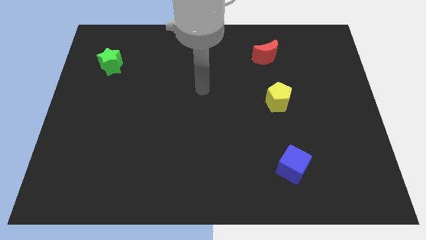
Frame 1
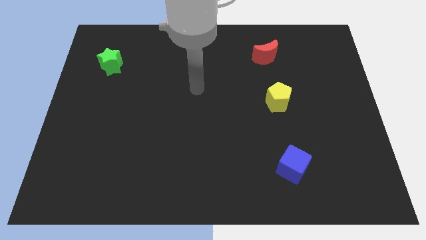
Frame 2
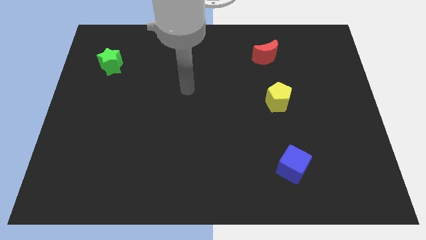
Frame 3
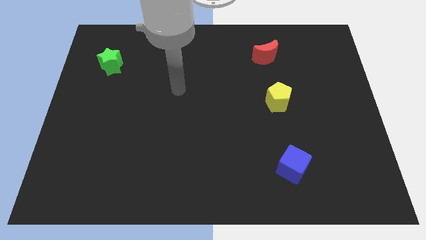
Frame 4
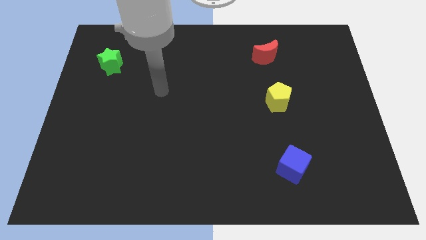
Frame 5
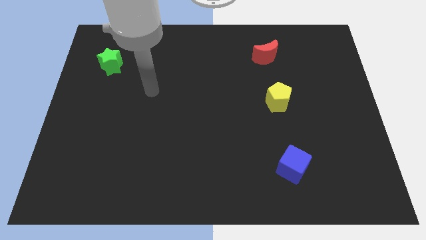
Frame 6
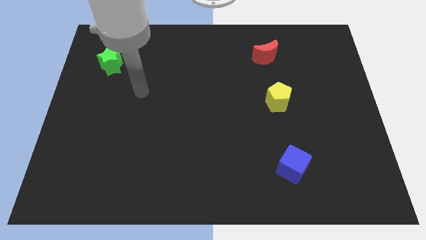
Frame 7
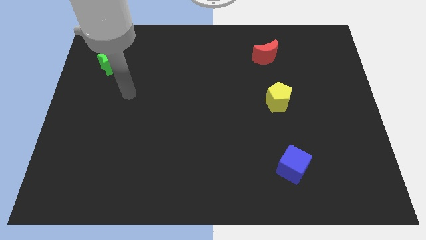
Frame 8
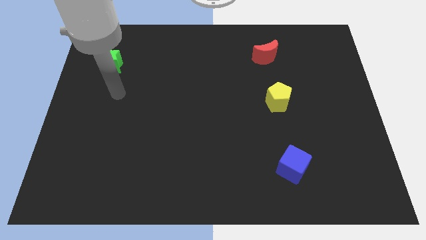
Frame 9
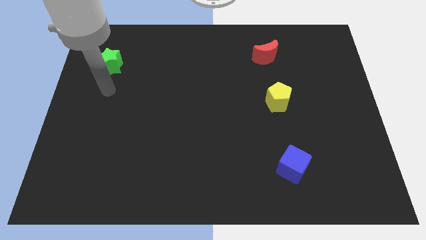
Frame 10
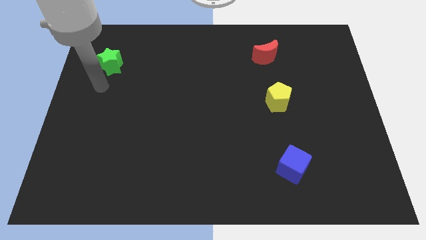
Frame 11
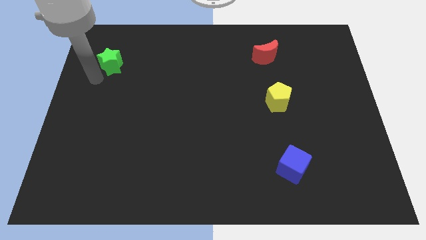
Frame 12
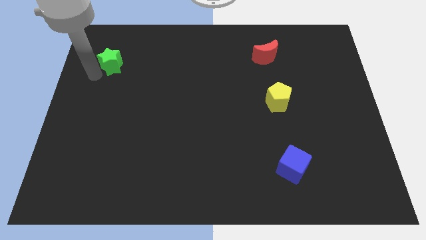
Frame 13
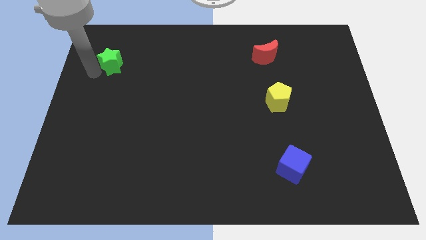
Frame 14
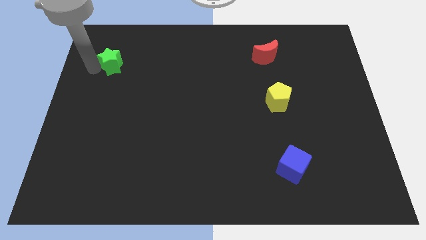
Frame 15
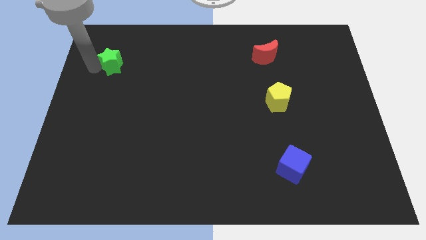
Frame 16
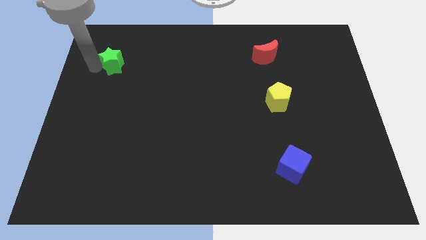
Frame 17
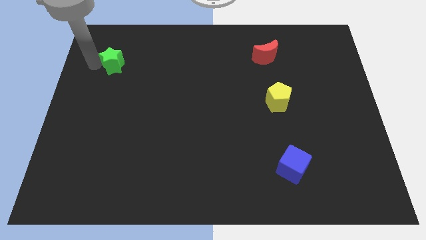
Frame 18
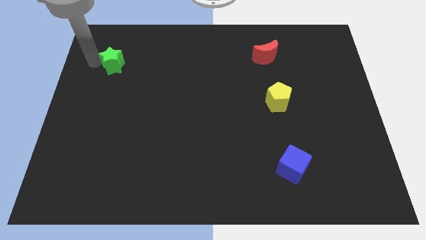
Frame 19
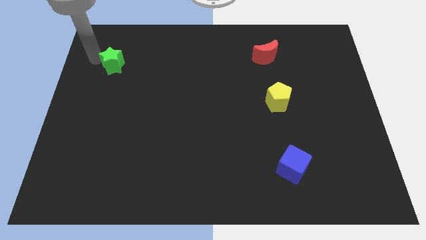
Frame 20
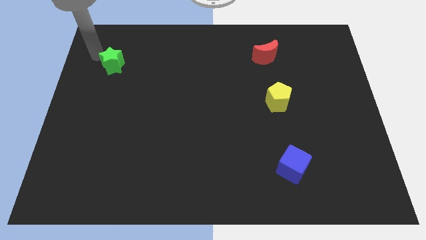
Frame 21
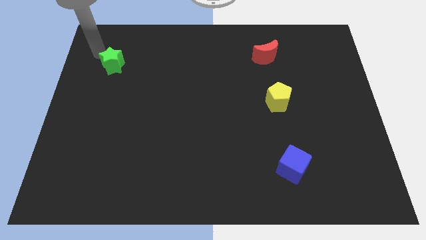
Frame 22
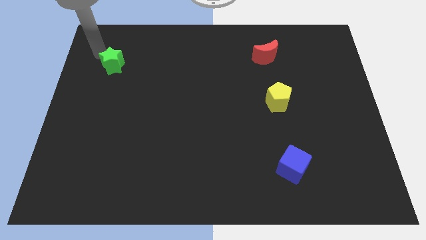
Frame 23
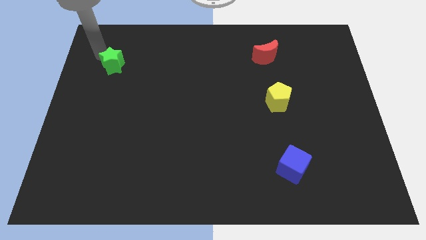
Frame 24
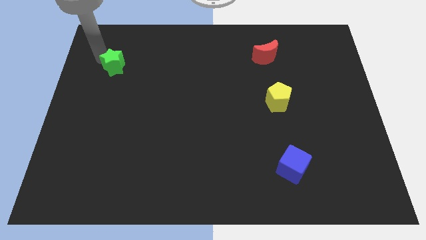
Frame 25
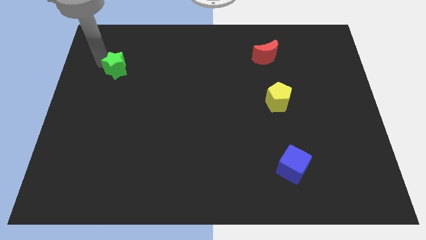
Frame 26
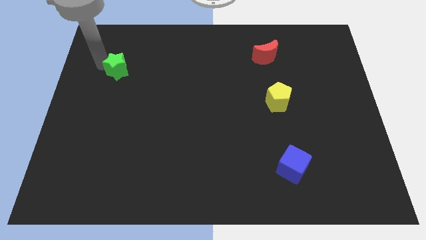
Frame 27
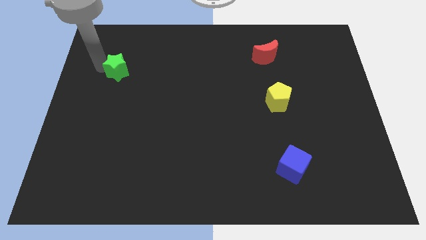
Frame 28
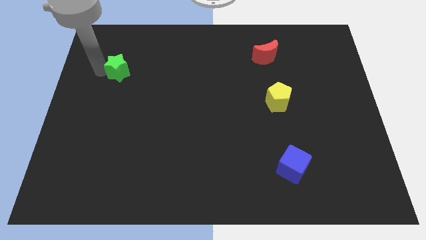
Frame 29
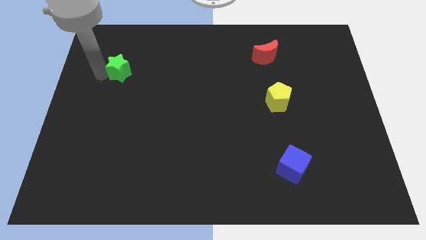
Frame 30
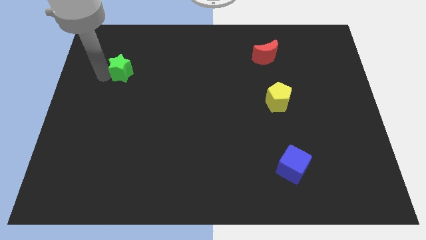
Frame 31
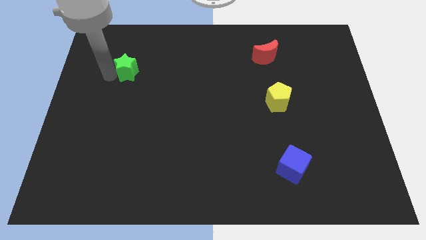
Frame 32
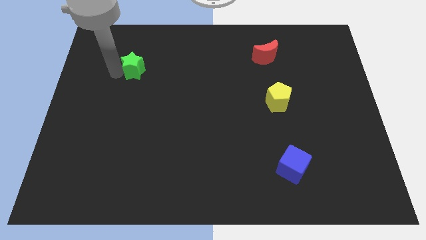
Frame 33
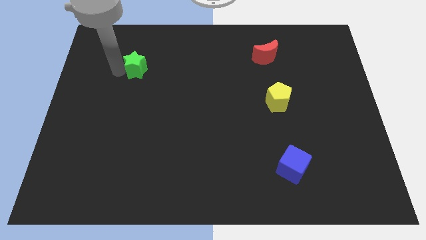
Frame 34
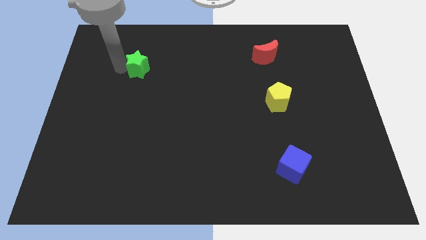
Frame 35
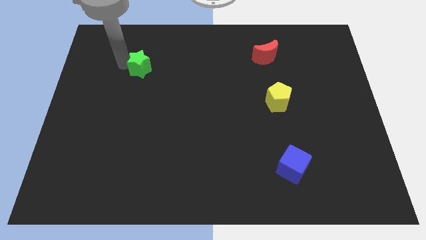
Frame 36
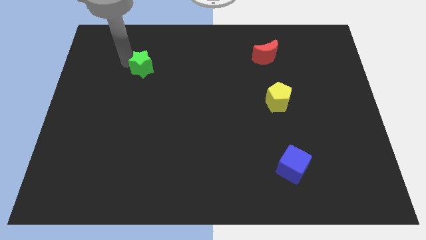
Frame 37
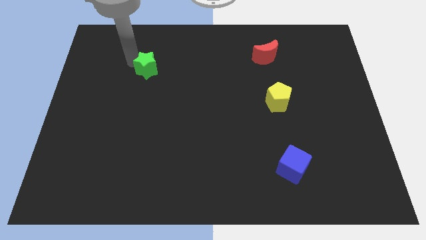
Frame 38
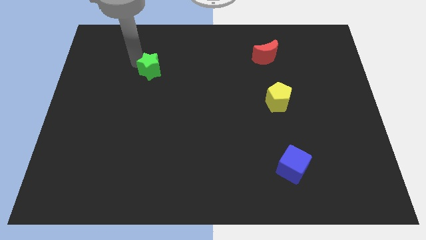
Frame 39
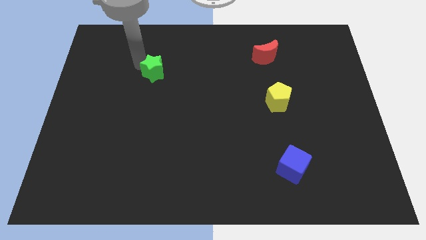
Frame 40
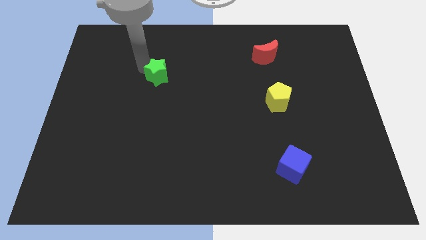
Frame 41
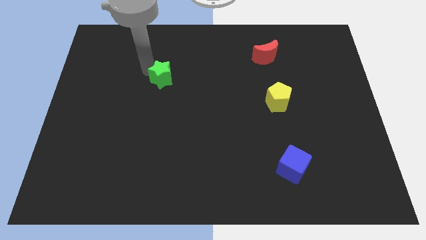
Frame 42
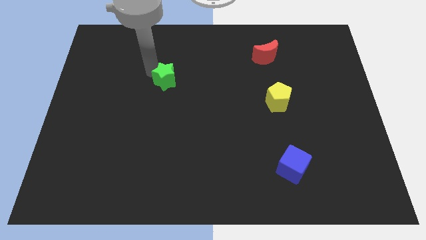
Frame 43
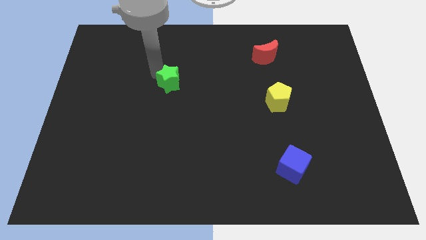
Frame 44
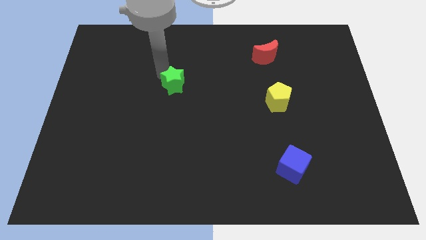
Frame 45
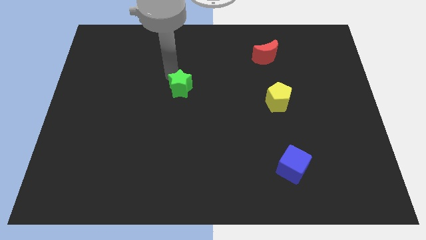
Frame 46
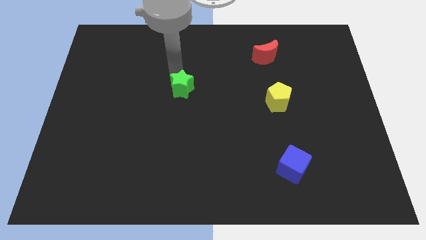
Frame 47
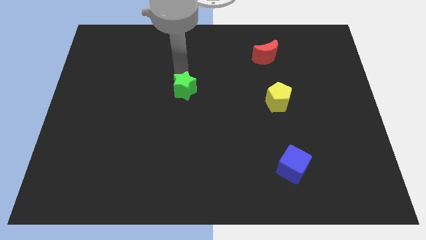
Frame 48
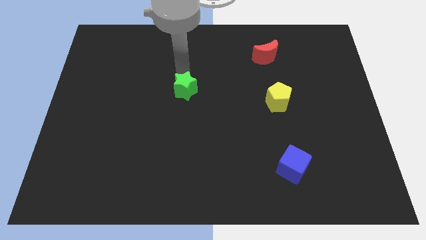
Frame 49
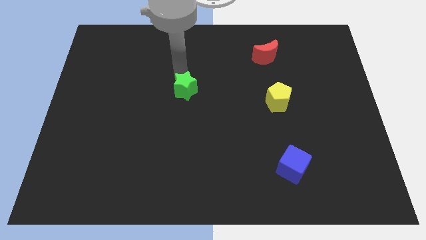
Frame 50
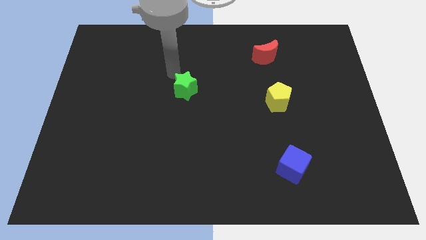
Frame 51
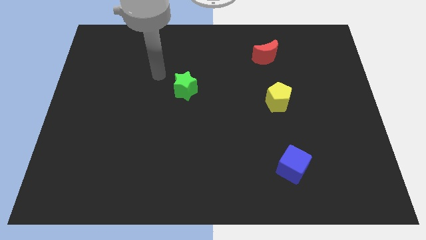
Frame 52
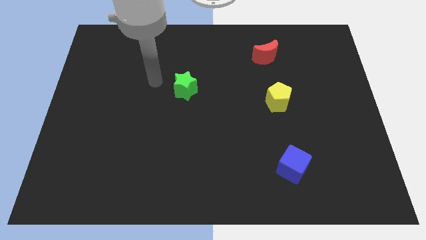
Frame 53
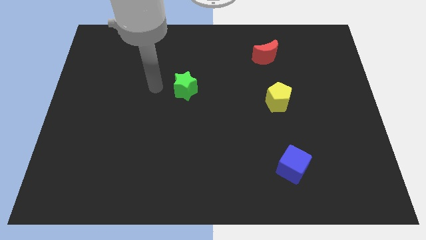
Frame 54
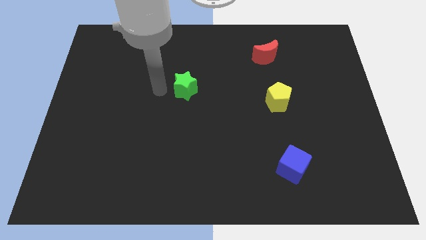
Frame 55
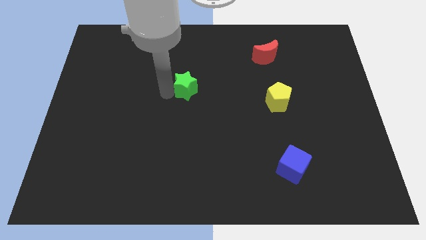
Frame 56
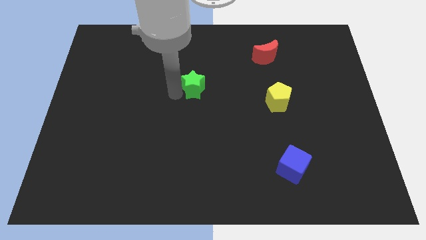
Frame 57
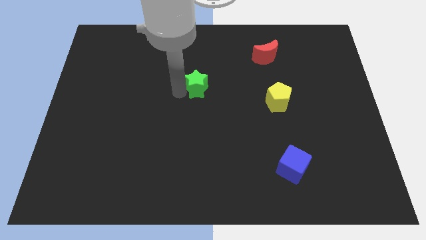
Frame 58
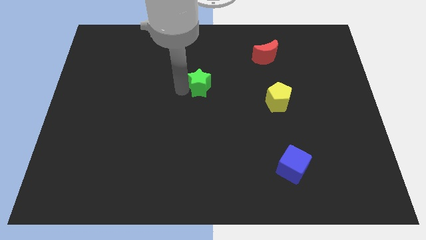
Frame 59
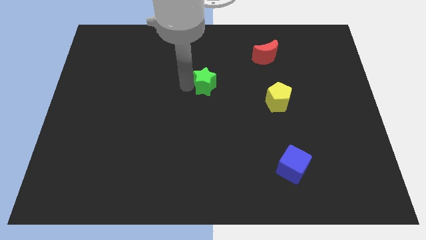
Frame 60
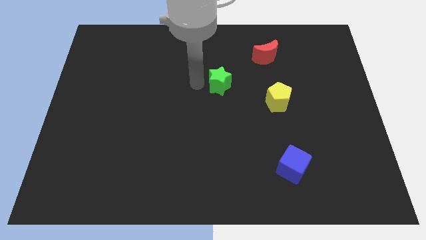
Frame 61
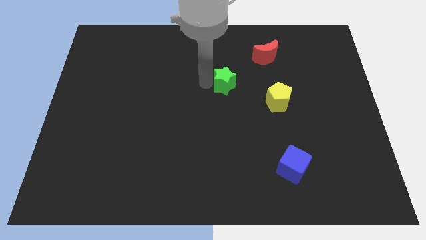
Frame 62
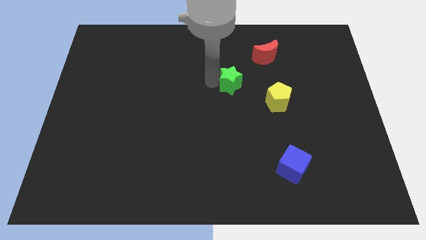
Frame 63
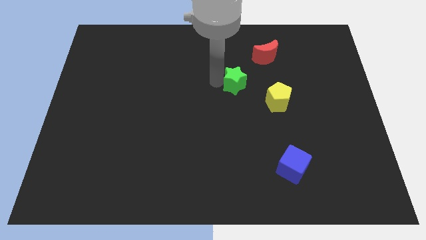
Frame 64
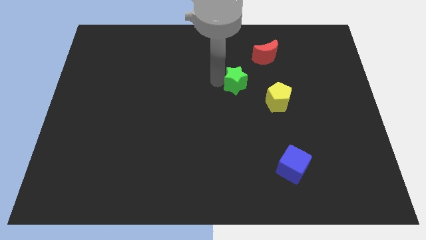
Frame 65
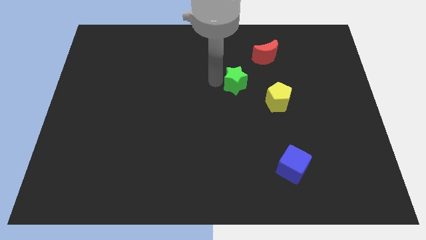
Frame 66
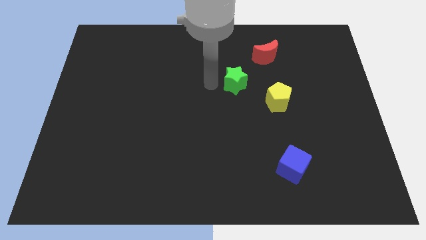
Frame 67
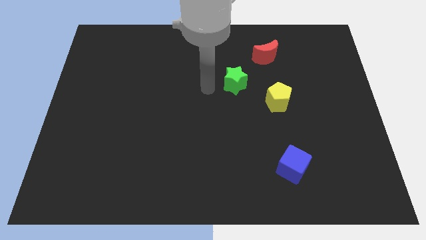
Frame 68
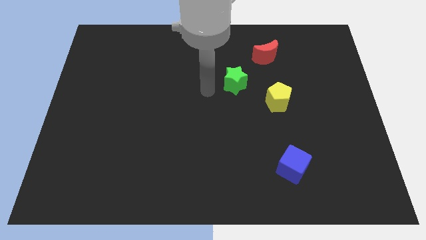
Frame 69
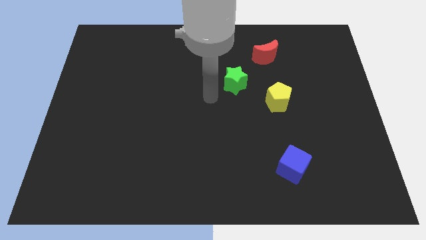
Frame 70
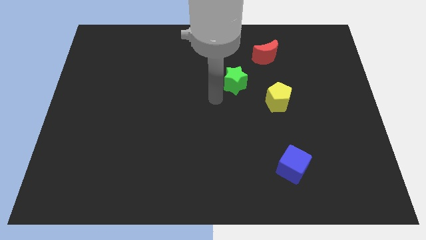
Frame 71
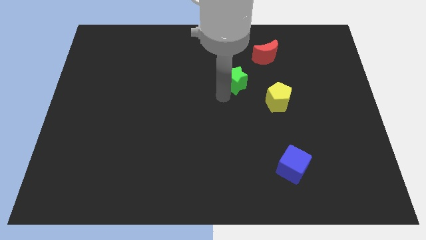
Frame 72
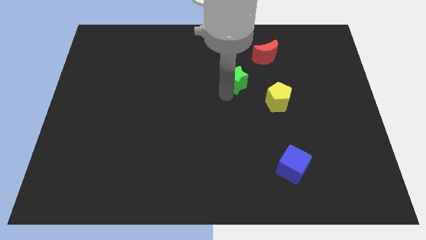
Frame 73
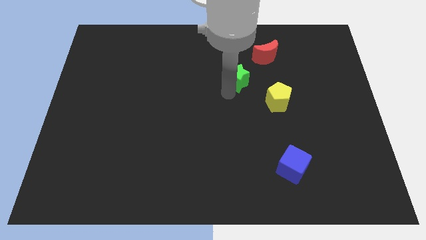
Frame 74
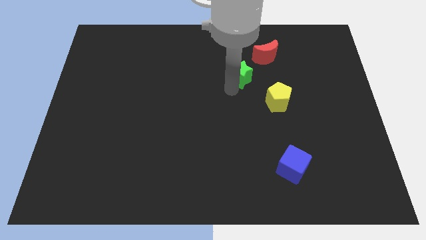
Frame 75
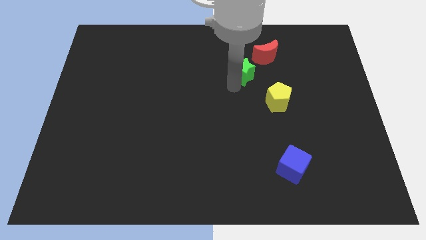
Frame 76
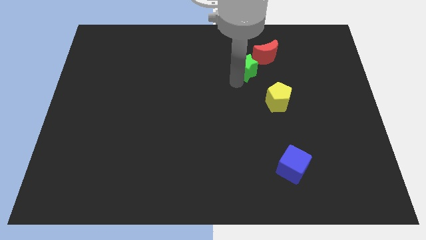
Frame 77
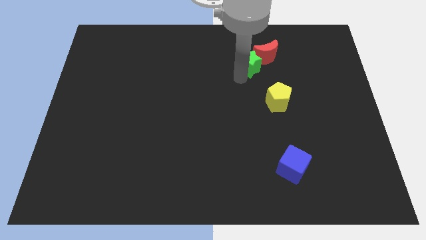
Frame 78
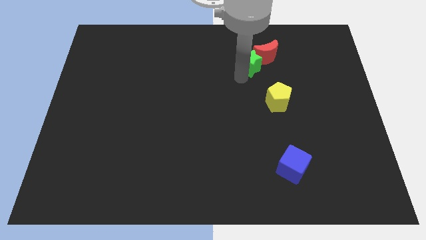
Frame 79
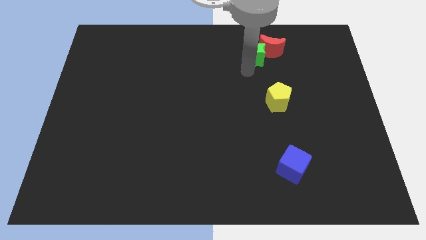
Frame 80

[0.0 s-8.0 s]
put the green block close to the red moon

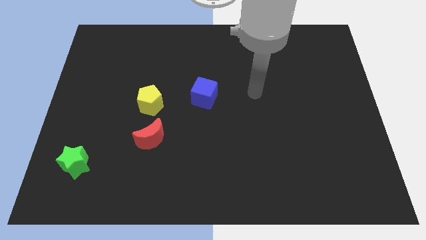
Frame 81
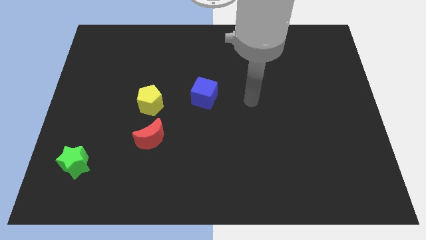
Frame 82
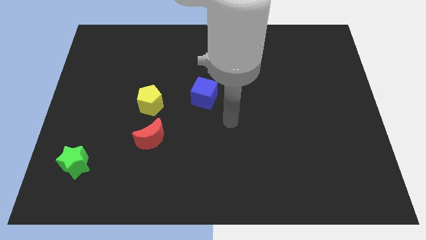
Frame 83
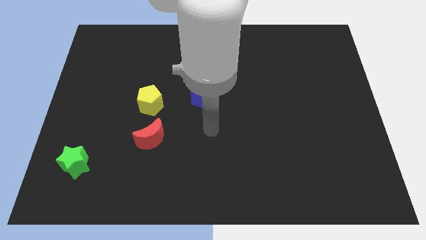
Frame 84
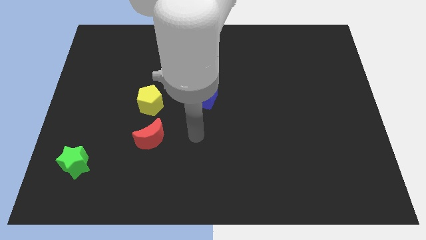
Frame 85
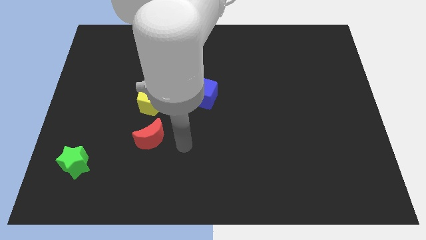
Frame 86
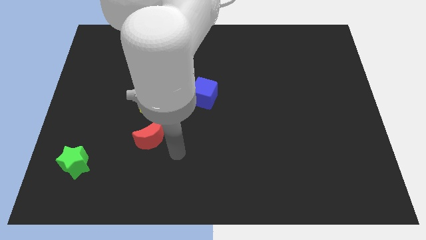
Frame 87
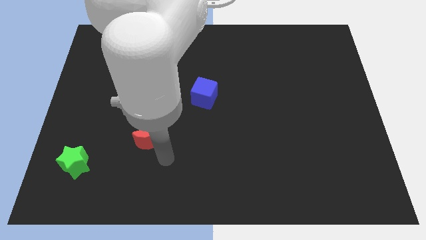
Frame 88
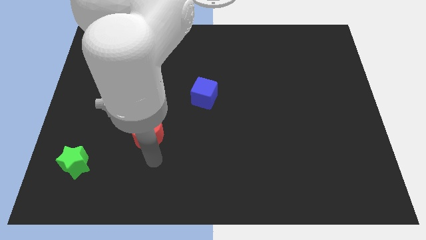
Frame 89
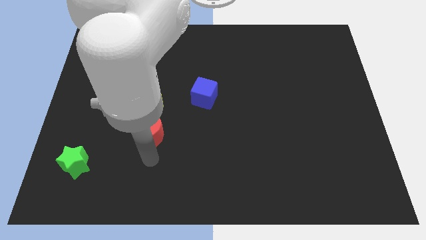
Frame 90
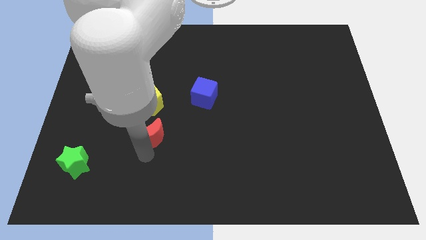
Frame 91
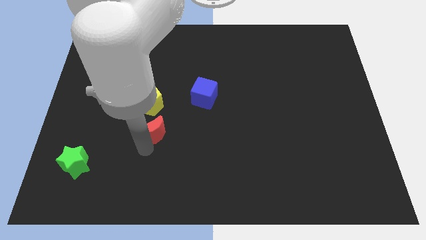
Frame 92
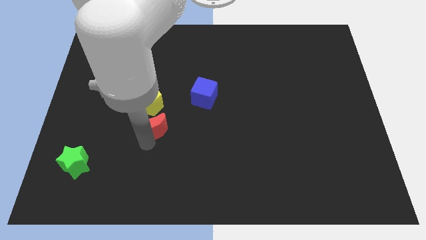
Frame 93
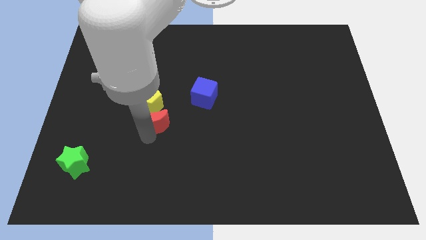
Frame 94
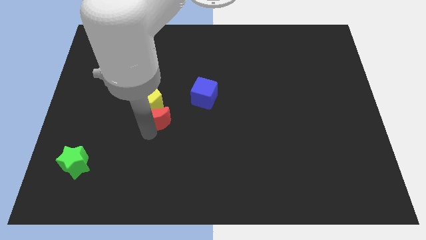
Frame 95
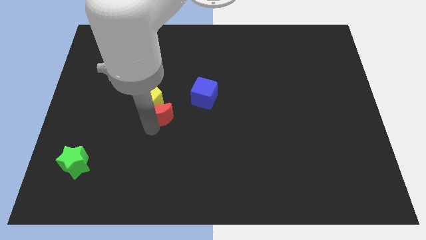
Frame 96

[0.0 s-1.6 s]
slide the red block towards the yellow pentagon
